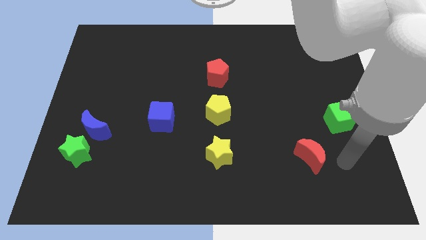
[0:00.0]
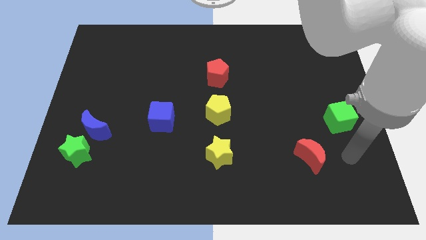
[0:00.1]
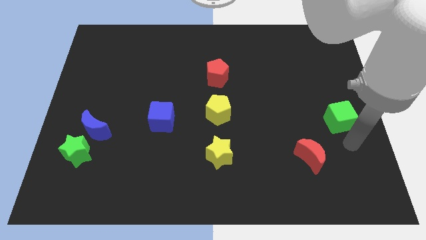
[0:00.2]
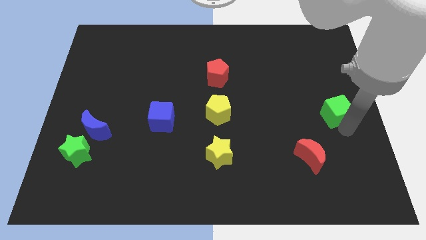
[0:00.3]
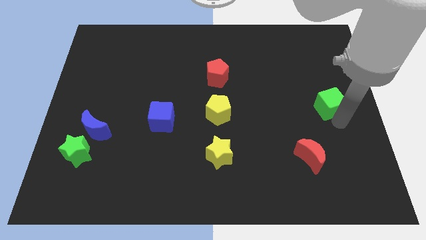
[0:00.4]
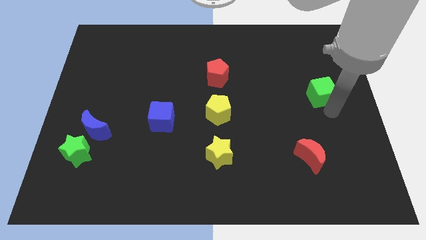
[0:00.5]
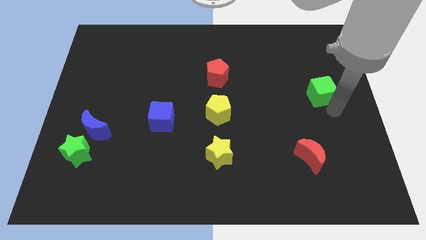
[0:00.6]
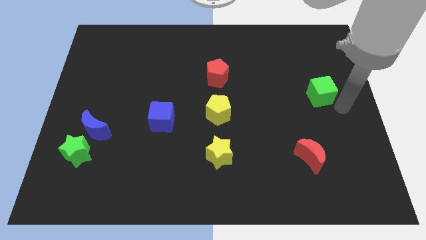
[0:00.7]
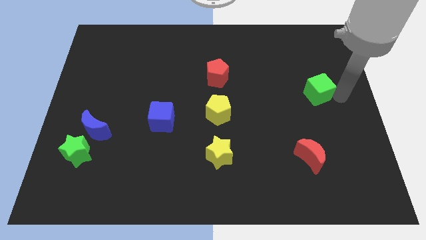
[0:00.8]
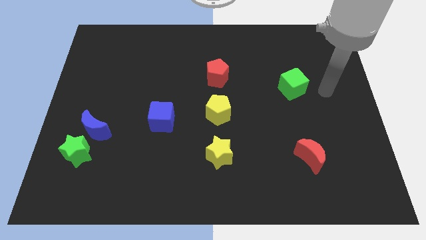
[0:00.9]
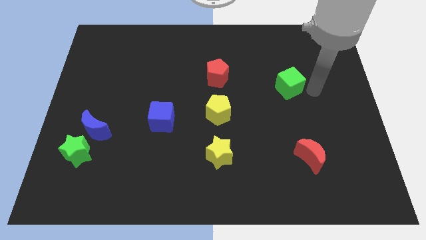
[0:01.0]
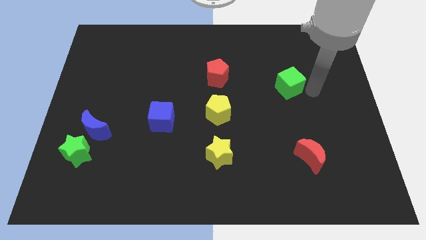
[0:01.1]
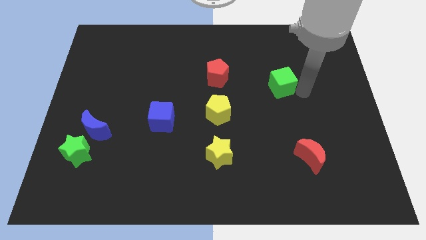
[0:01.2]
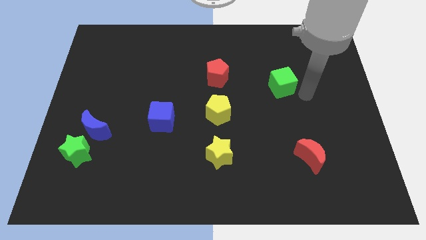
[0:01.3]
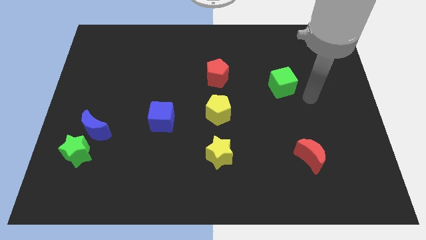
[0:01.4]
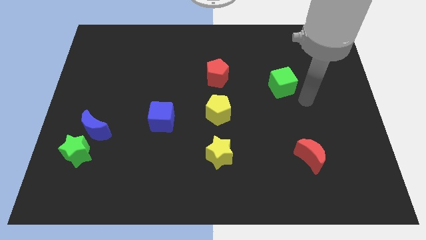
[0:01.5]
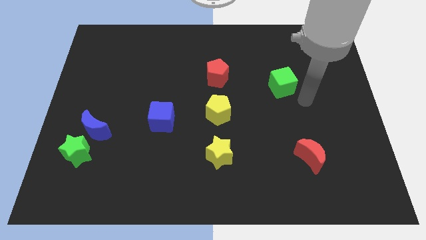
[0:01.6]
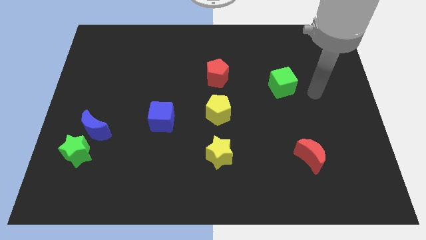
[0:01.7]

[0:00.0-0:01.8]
move the green cube to the right side of the red pentagon

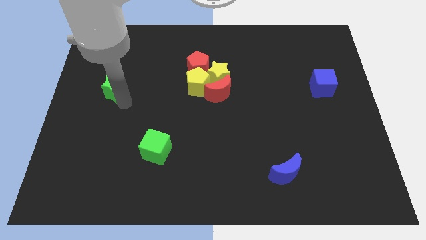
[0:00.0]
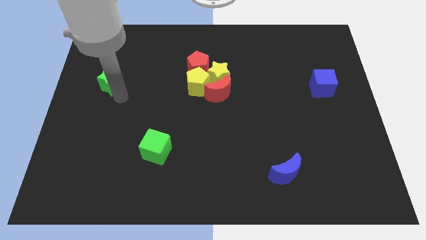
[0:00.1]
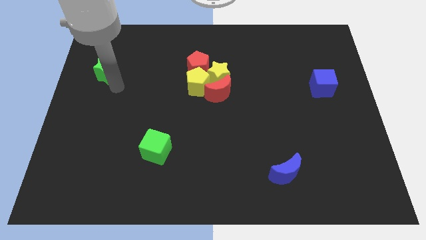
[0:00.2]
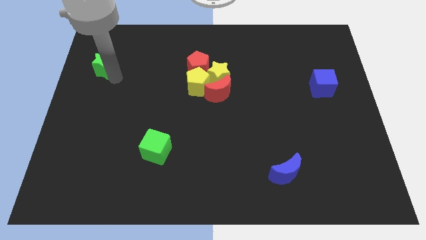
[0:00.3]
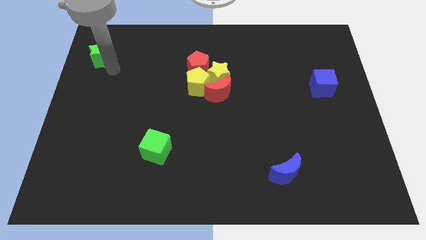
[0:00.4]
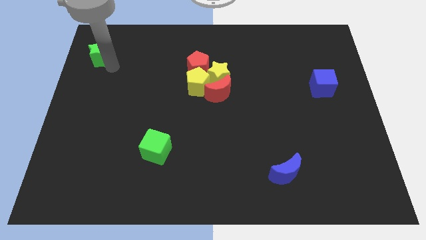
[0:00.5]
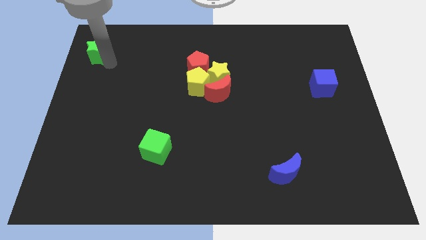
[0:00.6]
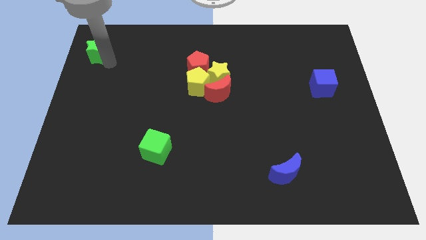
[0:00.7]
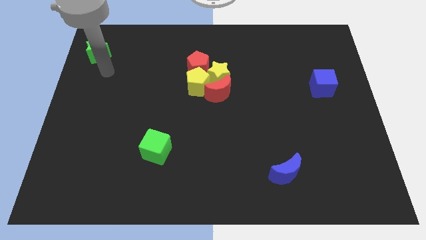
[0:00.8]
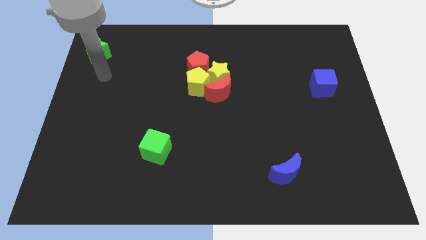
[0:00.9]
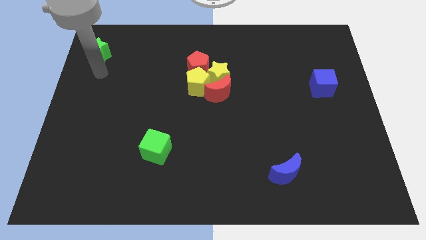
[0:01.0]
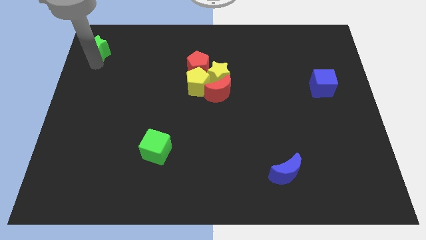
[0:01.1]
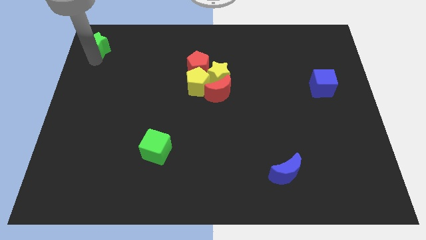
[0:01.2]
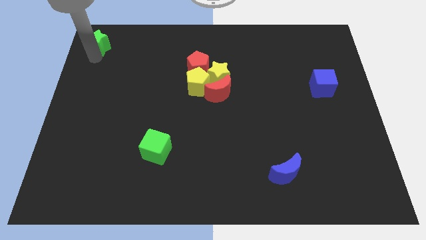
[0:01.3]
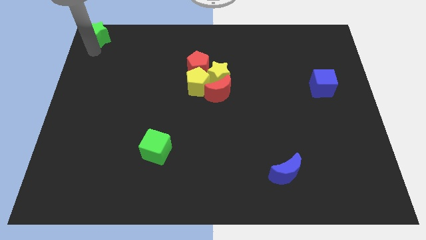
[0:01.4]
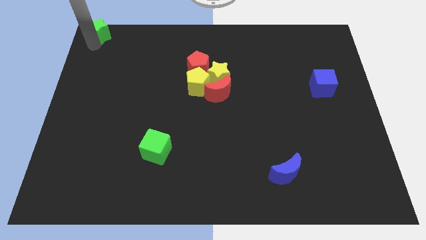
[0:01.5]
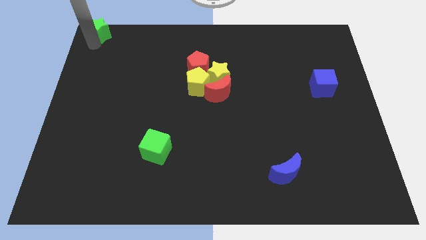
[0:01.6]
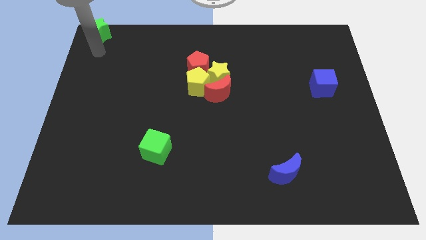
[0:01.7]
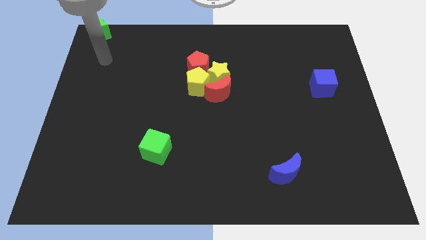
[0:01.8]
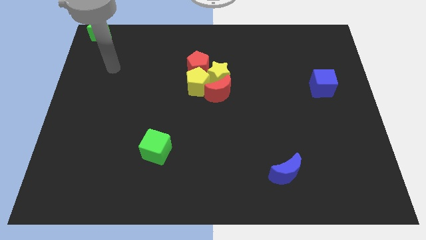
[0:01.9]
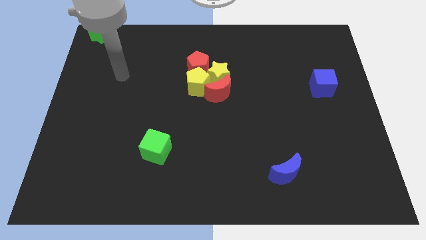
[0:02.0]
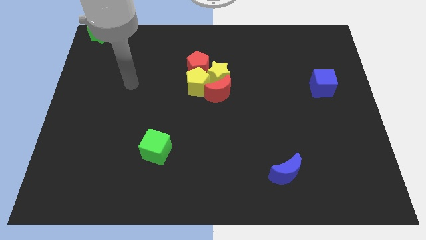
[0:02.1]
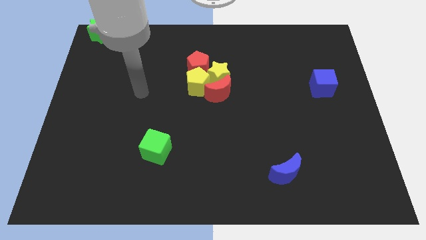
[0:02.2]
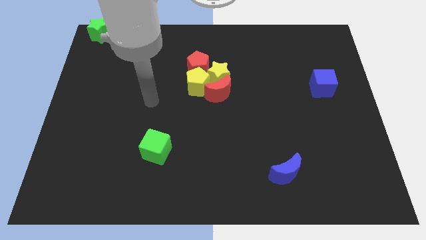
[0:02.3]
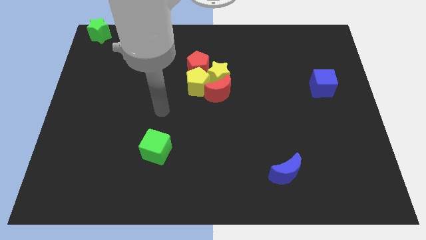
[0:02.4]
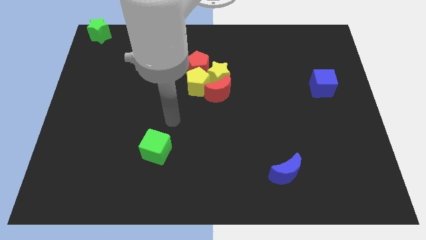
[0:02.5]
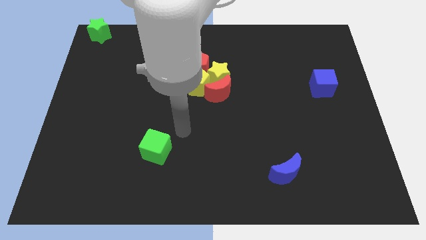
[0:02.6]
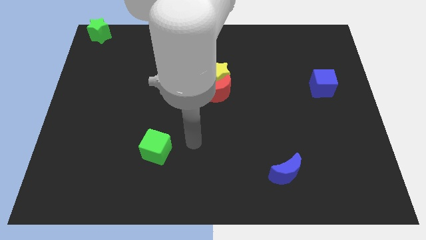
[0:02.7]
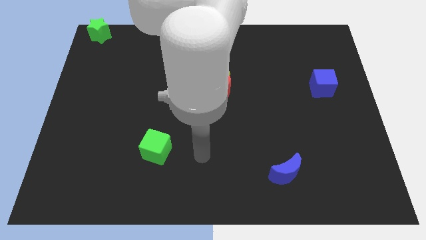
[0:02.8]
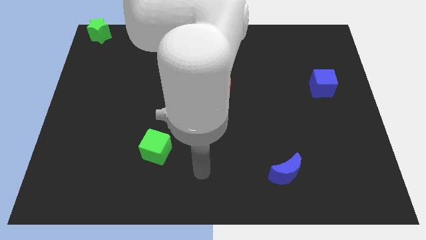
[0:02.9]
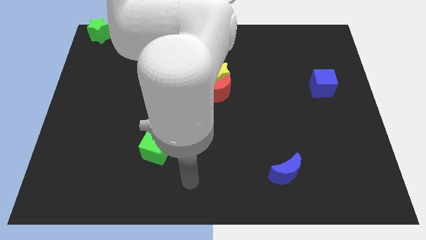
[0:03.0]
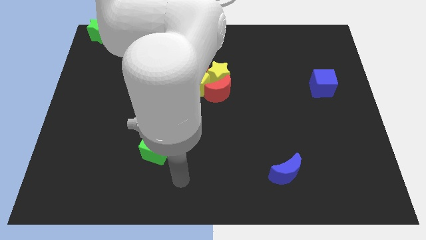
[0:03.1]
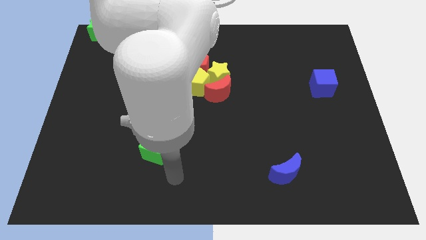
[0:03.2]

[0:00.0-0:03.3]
place the green star at the top left corner of the board

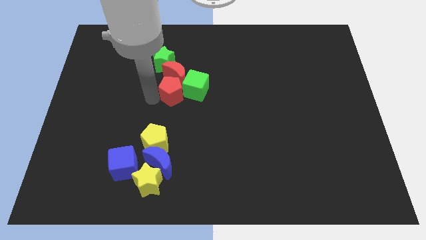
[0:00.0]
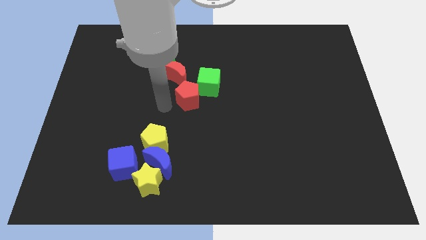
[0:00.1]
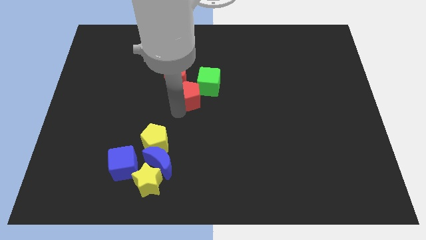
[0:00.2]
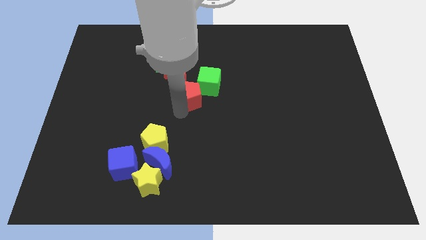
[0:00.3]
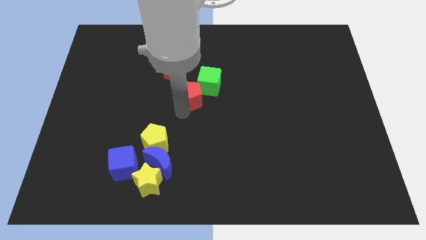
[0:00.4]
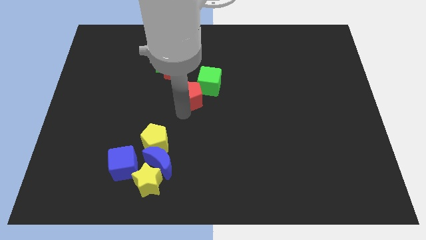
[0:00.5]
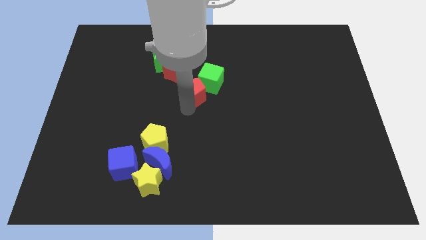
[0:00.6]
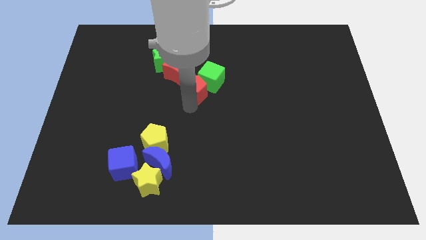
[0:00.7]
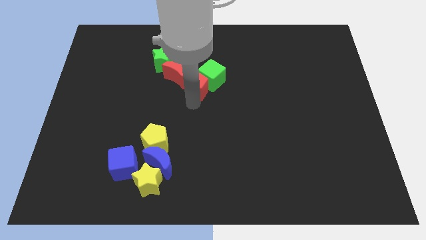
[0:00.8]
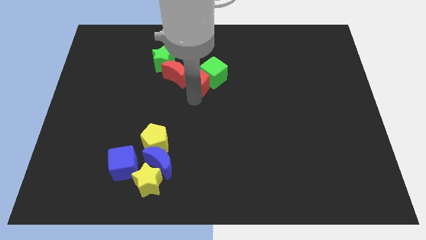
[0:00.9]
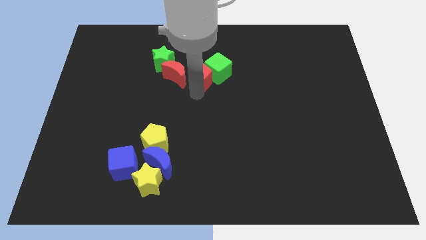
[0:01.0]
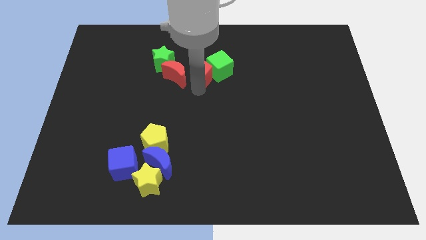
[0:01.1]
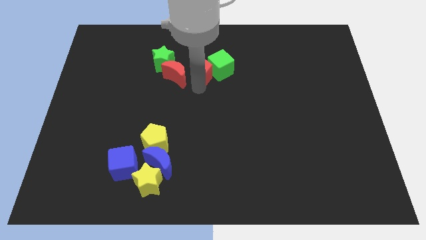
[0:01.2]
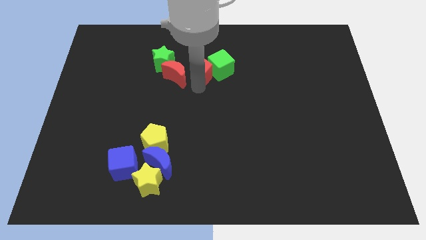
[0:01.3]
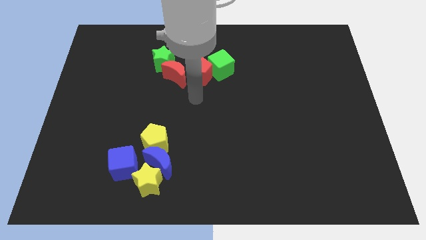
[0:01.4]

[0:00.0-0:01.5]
place the red pentagon in between the red crescent and green cube

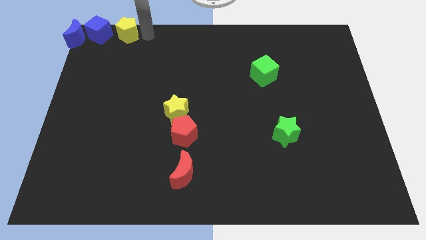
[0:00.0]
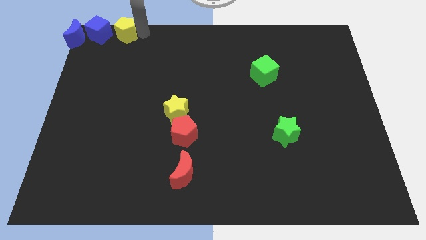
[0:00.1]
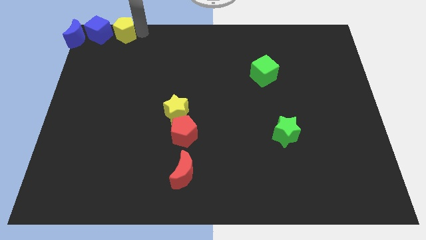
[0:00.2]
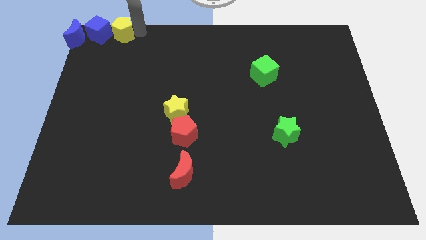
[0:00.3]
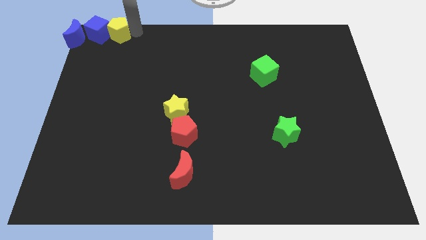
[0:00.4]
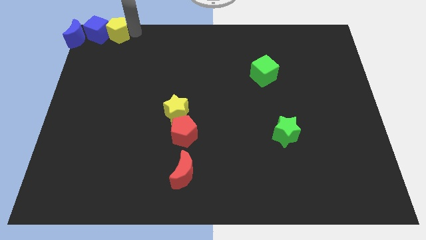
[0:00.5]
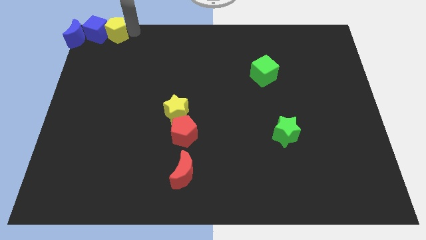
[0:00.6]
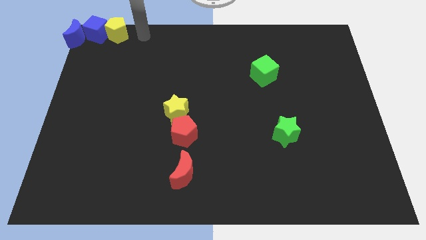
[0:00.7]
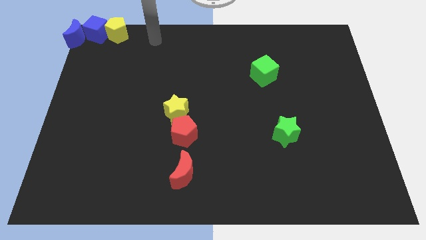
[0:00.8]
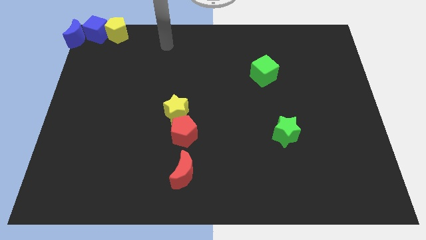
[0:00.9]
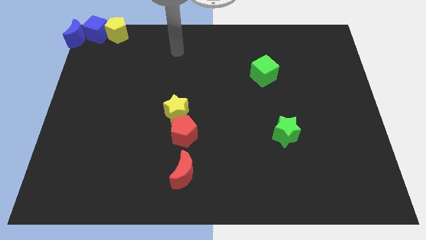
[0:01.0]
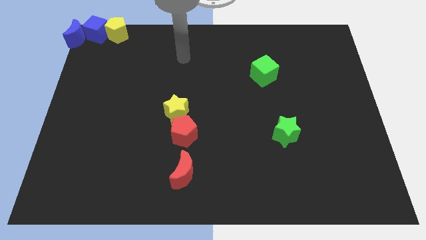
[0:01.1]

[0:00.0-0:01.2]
push the yellow penatgon close to the blue cube

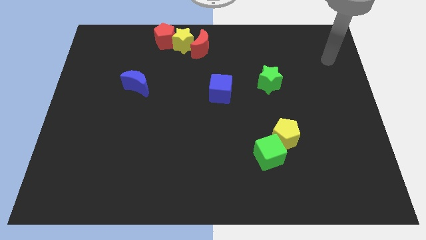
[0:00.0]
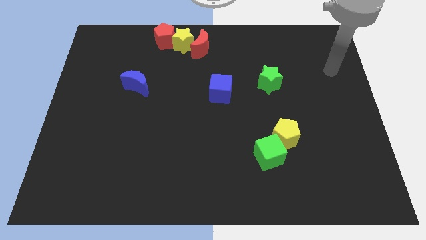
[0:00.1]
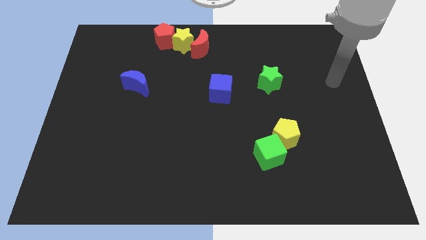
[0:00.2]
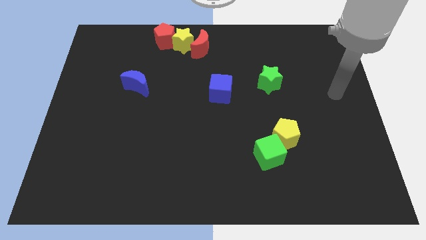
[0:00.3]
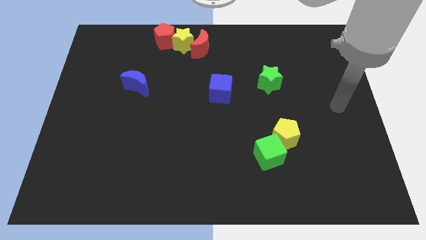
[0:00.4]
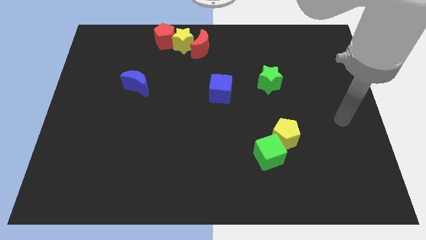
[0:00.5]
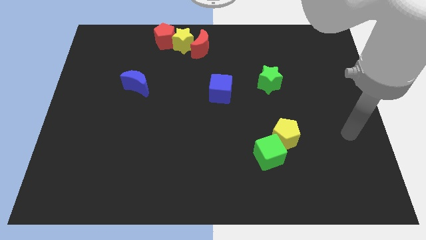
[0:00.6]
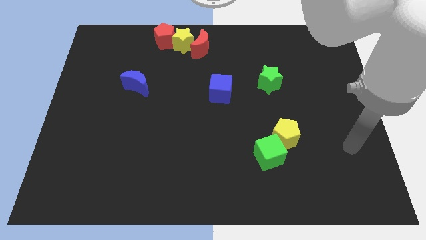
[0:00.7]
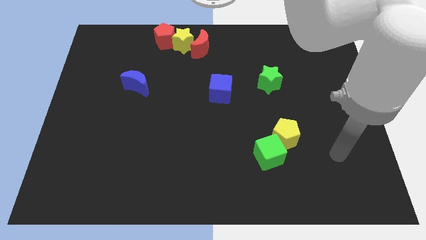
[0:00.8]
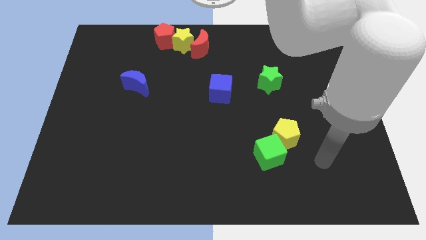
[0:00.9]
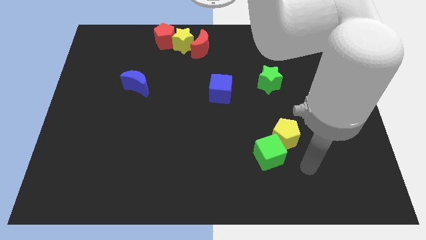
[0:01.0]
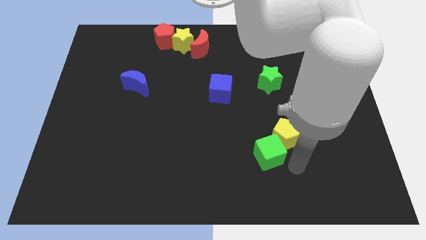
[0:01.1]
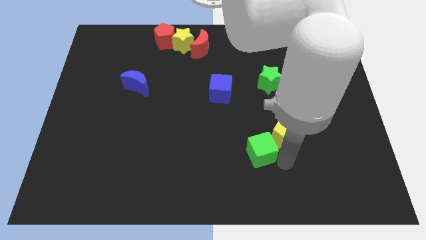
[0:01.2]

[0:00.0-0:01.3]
move your arm towards the green cube
